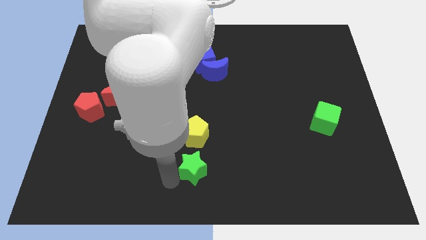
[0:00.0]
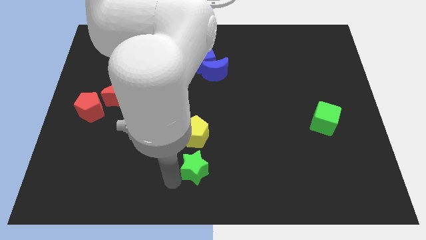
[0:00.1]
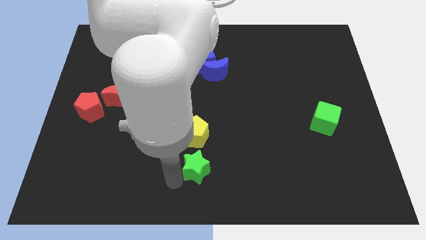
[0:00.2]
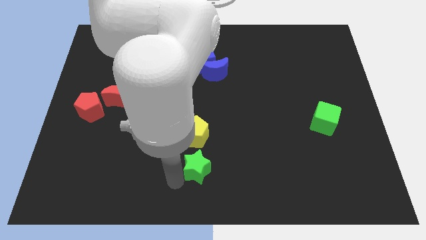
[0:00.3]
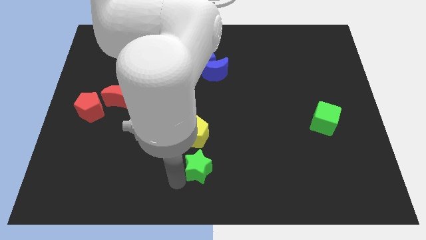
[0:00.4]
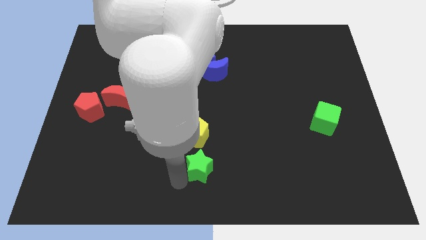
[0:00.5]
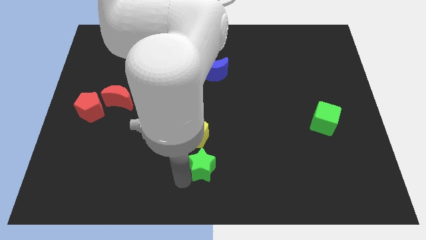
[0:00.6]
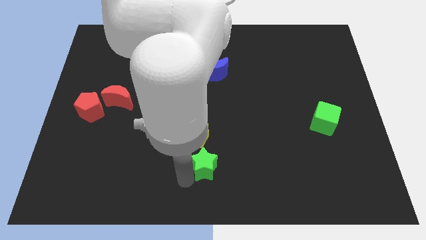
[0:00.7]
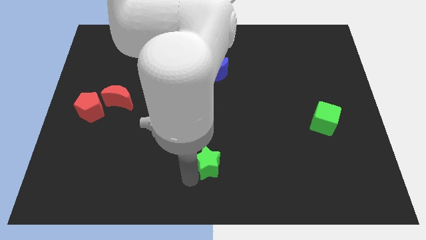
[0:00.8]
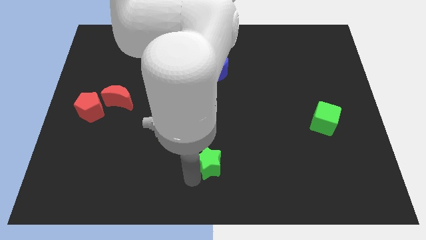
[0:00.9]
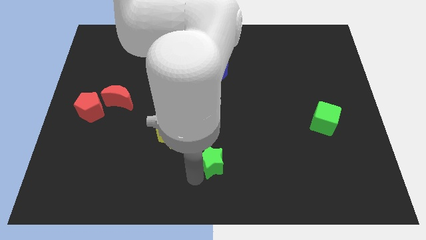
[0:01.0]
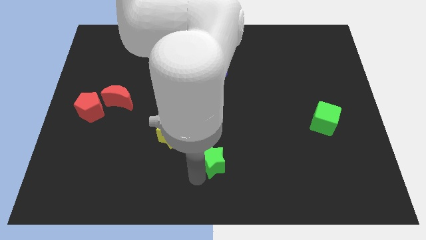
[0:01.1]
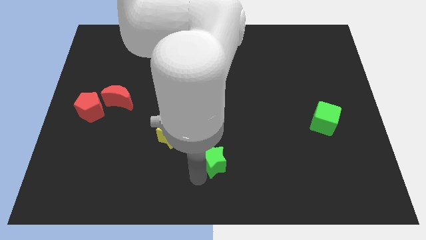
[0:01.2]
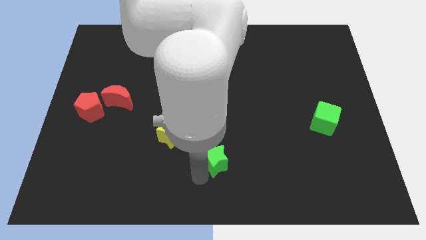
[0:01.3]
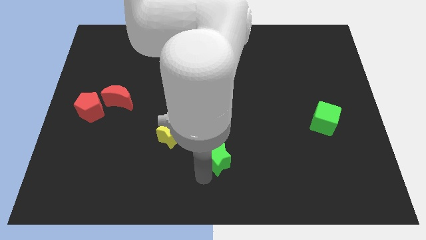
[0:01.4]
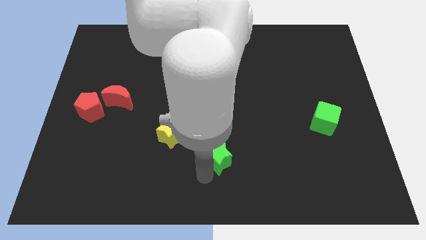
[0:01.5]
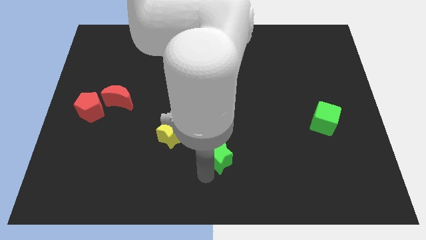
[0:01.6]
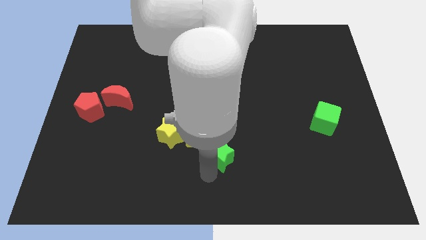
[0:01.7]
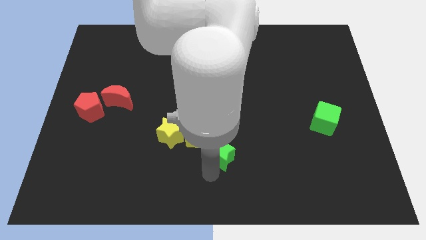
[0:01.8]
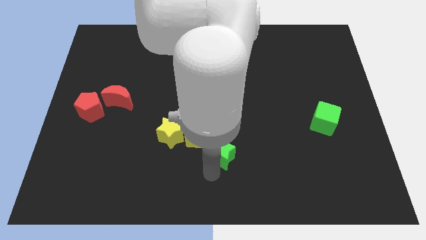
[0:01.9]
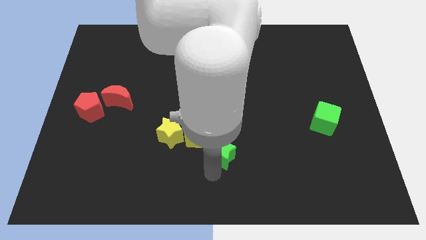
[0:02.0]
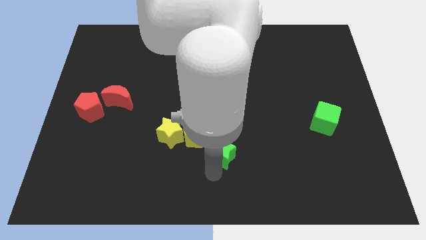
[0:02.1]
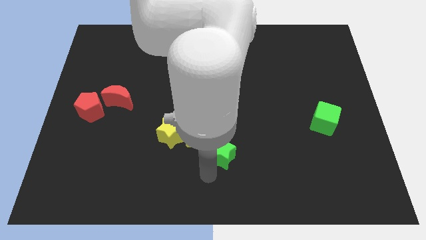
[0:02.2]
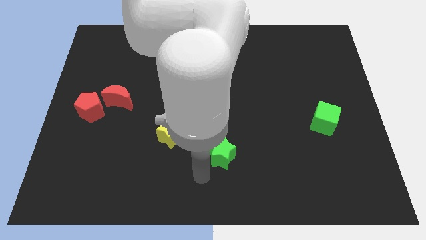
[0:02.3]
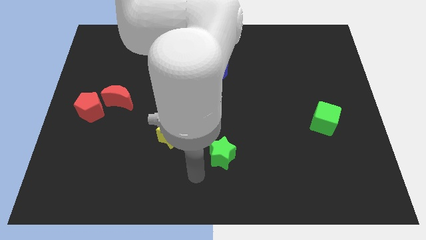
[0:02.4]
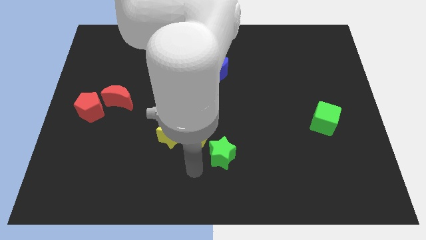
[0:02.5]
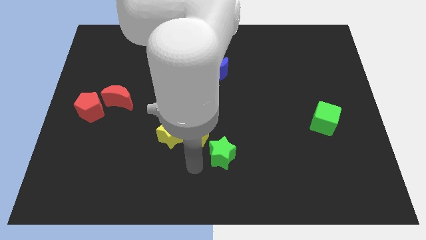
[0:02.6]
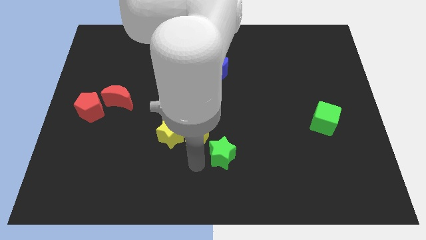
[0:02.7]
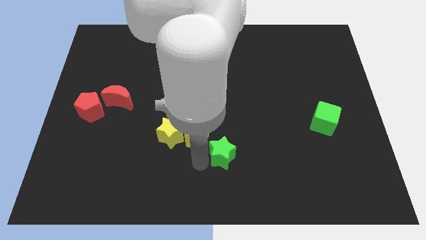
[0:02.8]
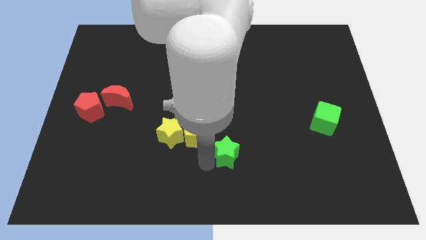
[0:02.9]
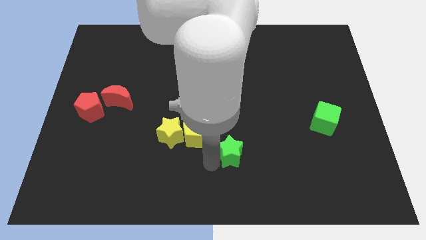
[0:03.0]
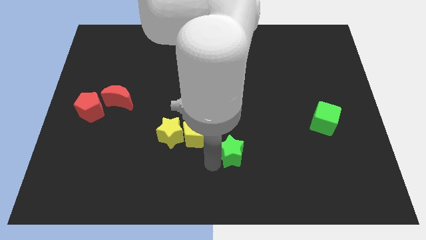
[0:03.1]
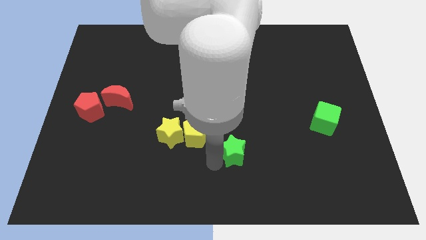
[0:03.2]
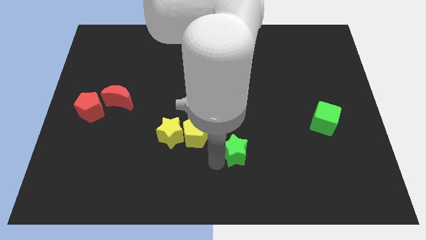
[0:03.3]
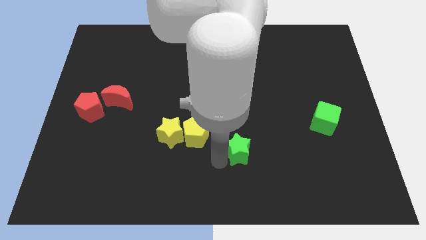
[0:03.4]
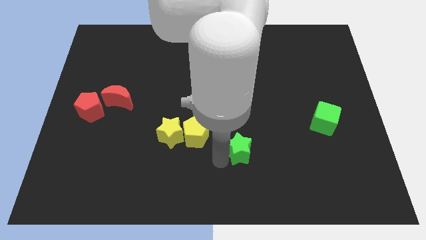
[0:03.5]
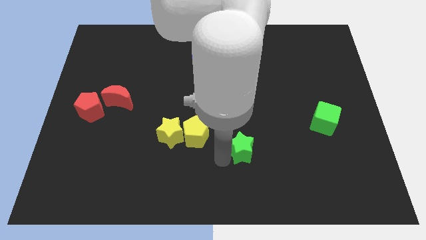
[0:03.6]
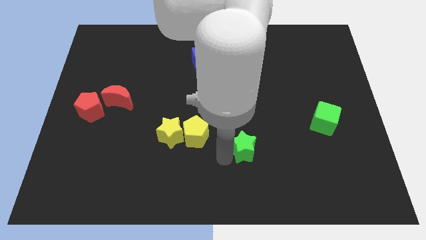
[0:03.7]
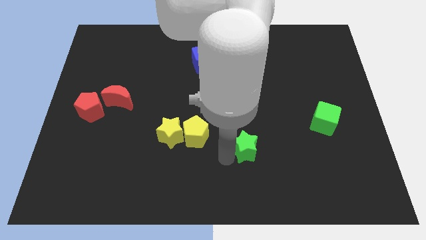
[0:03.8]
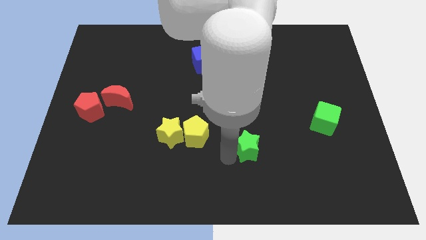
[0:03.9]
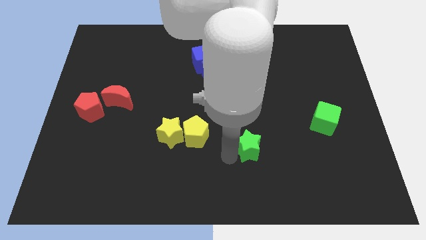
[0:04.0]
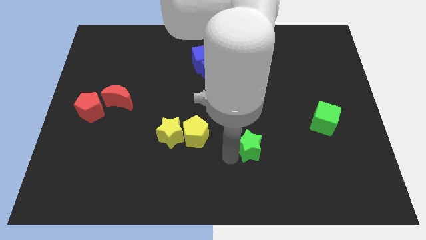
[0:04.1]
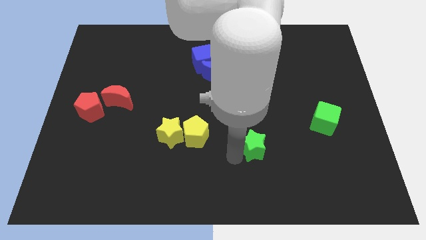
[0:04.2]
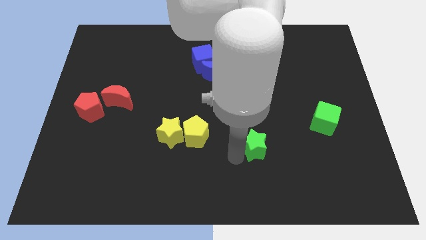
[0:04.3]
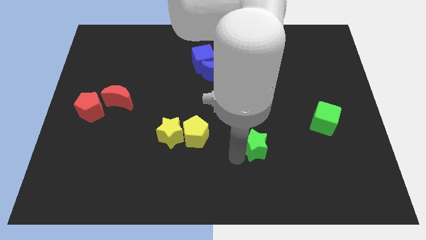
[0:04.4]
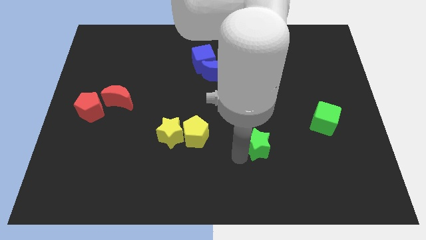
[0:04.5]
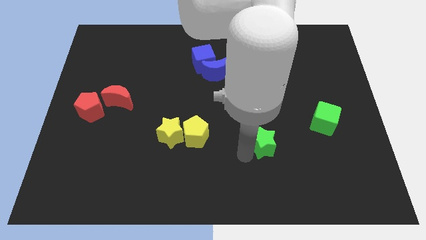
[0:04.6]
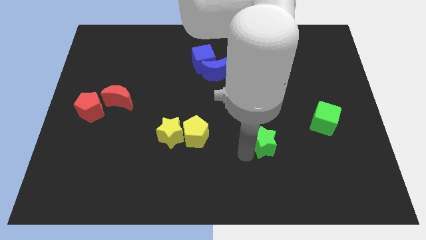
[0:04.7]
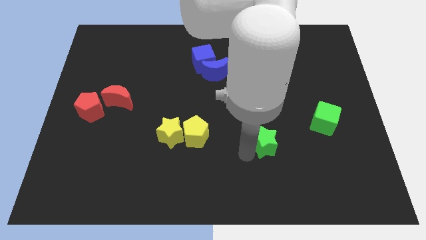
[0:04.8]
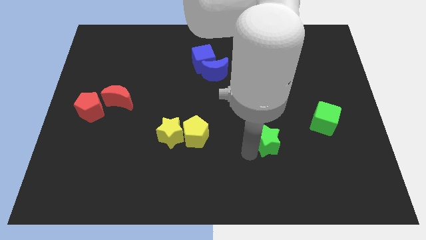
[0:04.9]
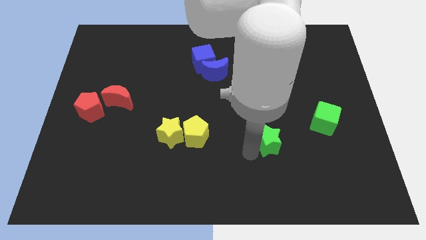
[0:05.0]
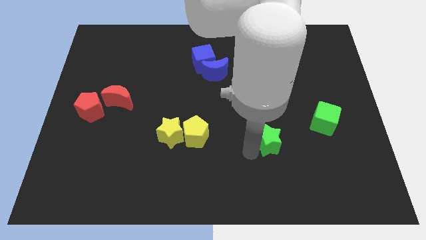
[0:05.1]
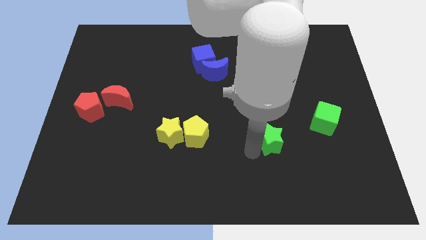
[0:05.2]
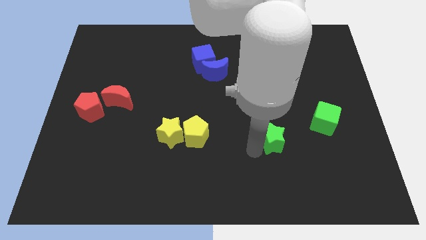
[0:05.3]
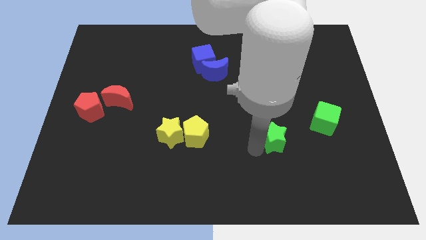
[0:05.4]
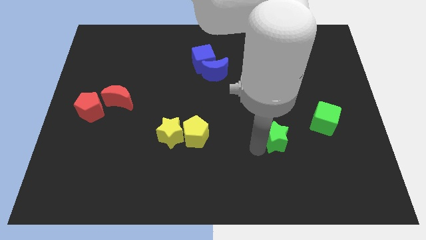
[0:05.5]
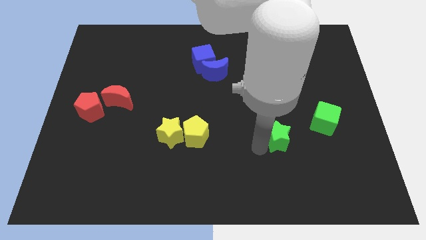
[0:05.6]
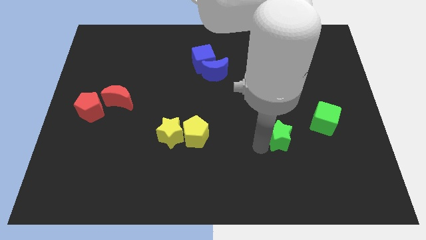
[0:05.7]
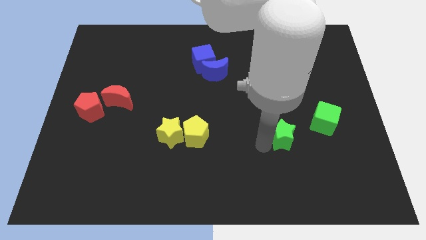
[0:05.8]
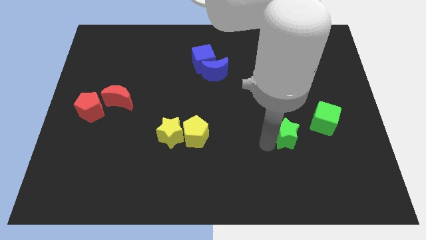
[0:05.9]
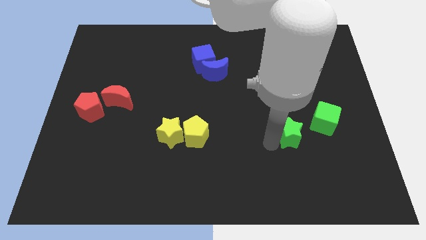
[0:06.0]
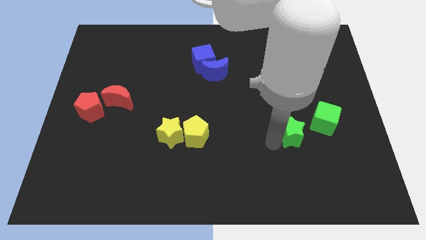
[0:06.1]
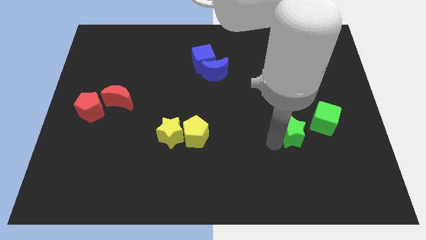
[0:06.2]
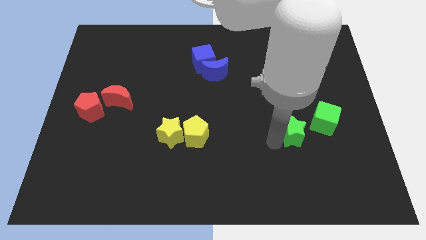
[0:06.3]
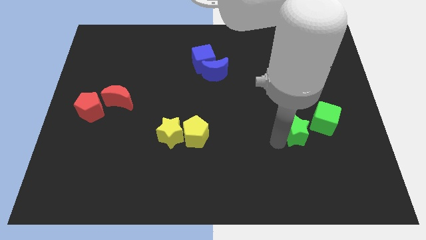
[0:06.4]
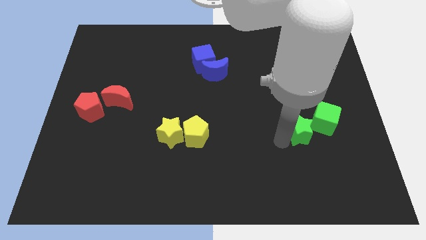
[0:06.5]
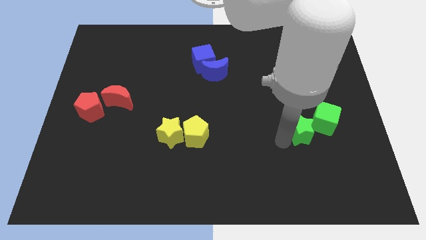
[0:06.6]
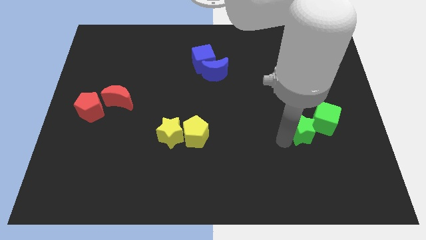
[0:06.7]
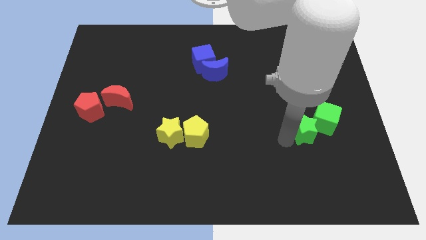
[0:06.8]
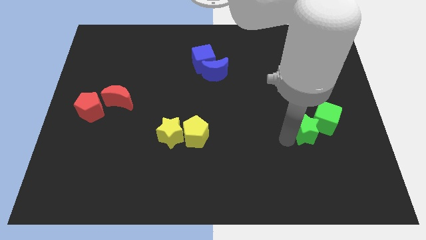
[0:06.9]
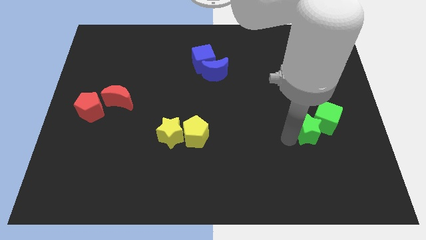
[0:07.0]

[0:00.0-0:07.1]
push the green star to the left of the green cube

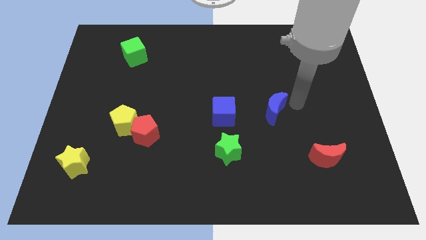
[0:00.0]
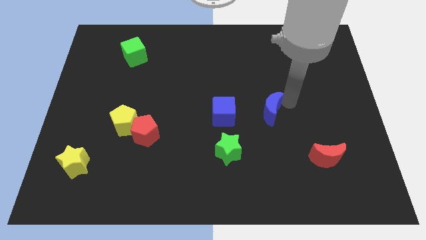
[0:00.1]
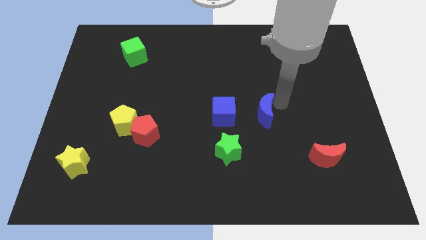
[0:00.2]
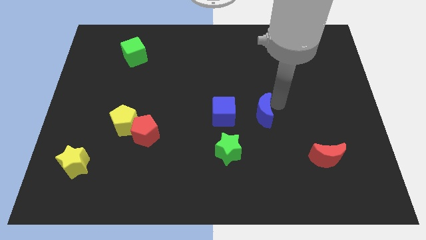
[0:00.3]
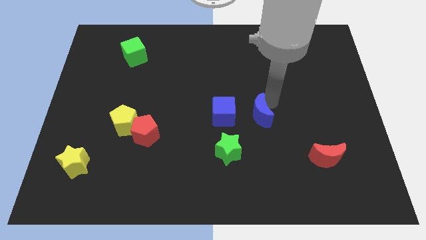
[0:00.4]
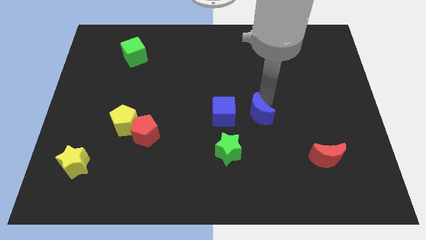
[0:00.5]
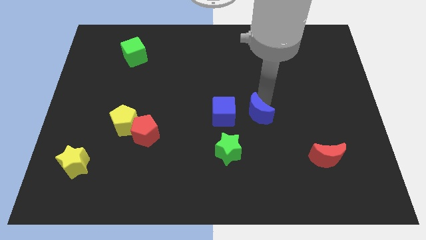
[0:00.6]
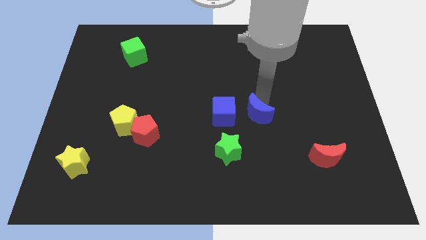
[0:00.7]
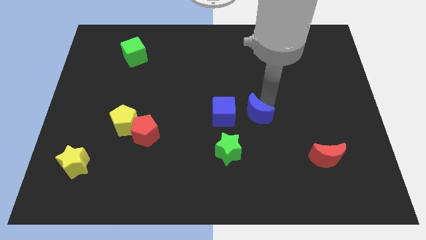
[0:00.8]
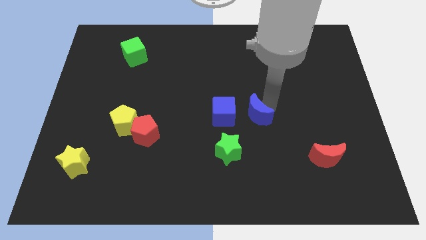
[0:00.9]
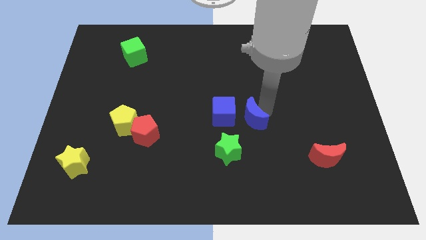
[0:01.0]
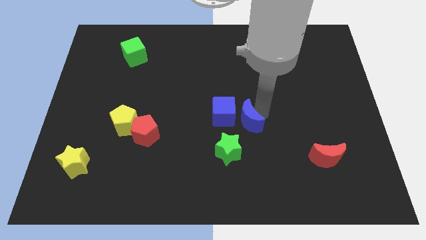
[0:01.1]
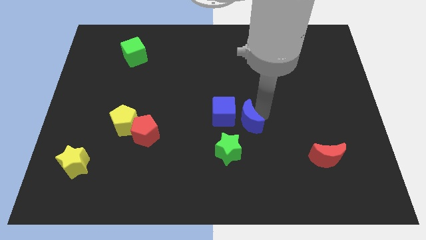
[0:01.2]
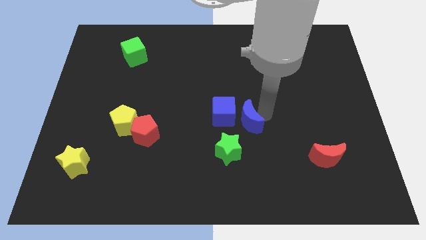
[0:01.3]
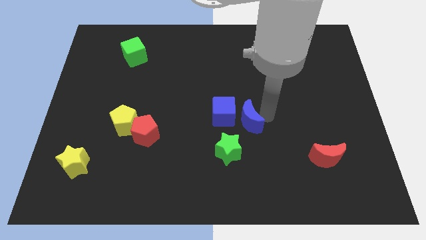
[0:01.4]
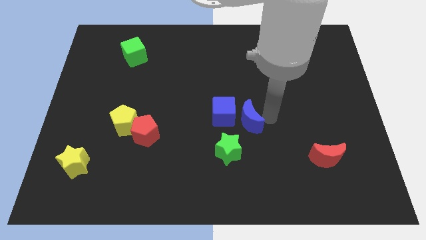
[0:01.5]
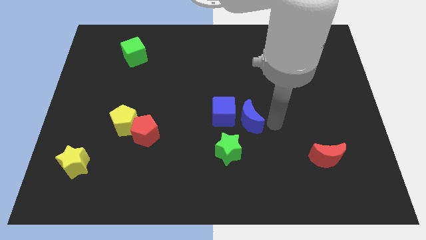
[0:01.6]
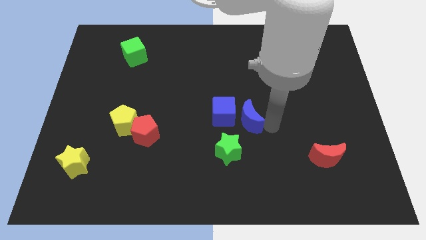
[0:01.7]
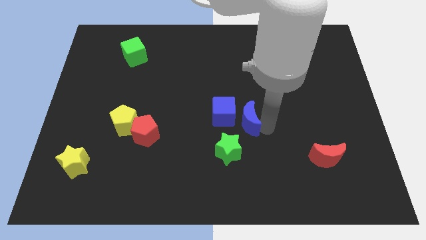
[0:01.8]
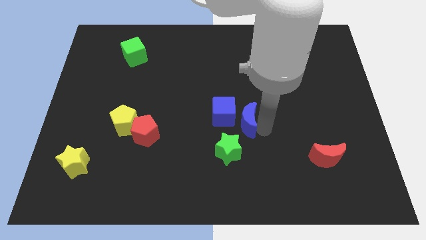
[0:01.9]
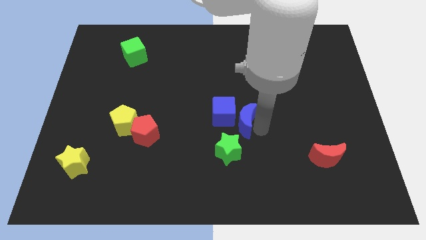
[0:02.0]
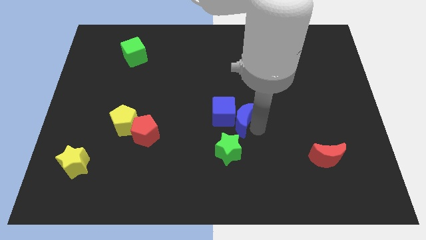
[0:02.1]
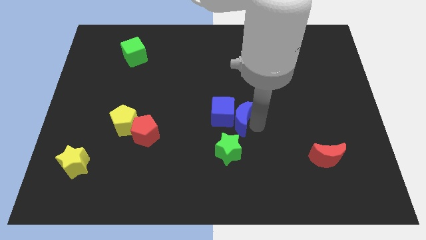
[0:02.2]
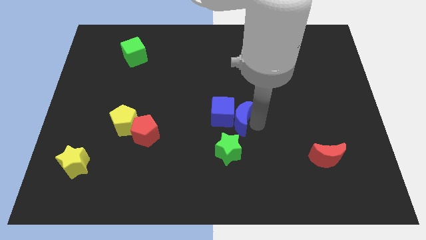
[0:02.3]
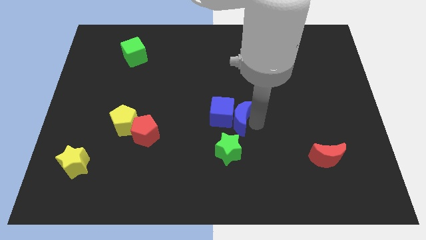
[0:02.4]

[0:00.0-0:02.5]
move the blue crescent to right of the blue cube
